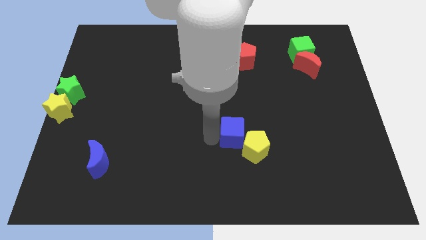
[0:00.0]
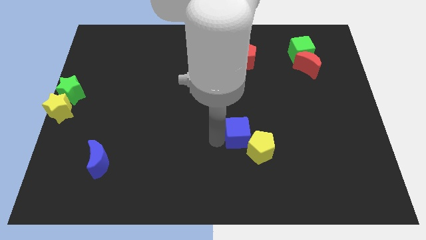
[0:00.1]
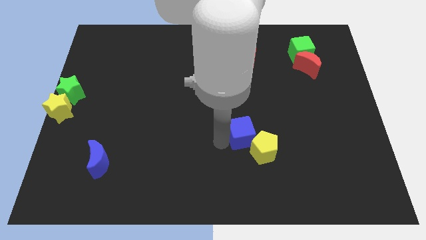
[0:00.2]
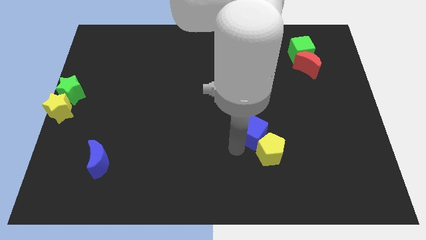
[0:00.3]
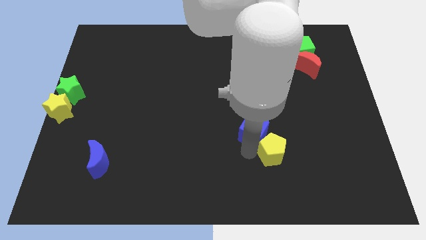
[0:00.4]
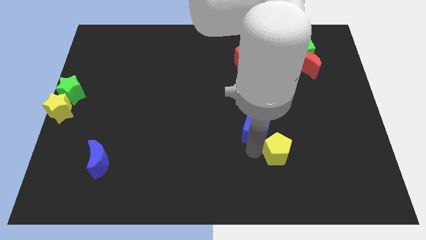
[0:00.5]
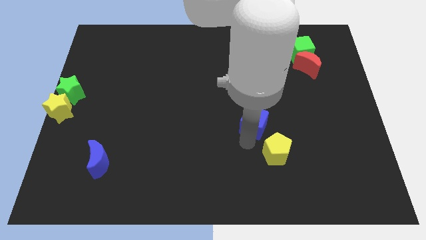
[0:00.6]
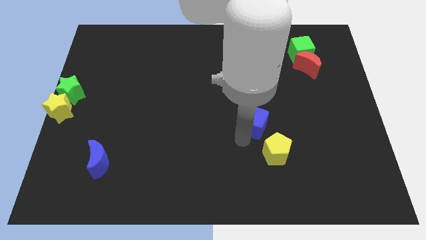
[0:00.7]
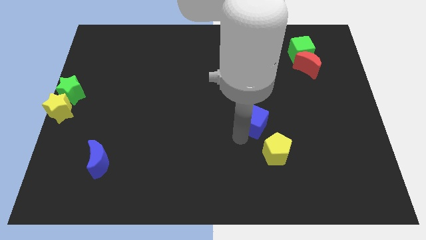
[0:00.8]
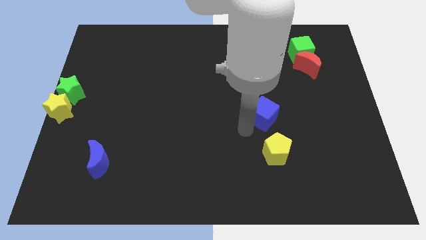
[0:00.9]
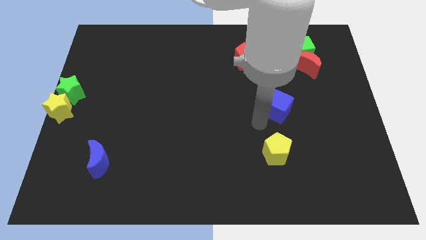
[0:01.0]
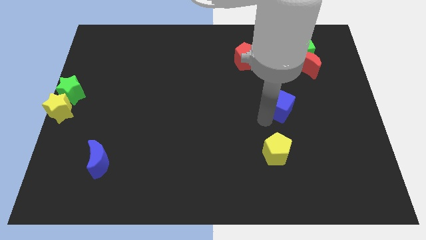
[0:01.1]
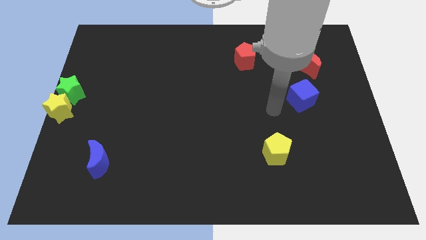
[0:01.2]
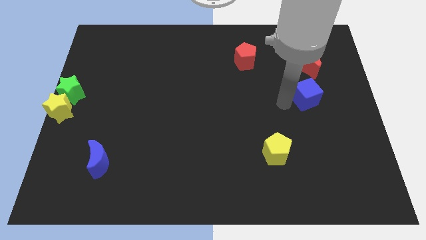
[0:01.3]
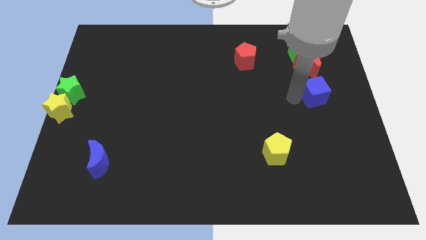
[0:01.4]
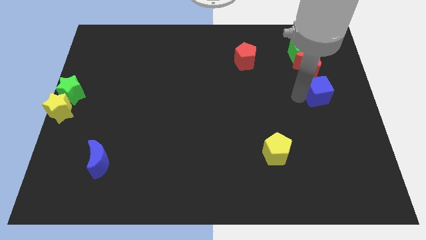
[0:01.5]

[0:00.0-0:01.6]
separate the blue cube from the yellow pentagon

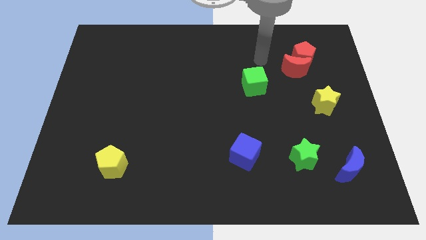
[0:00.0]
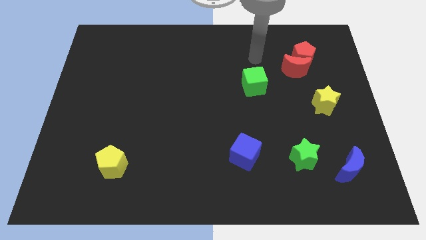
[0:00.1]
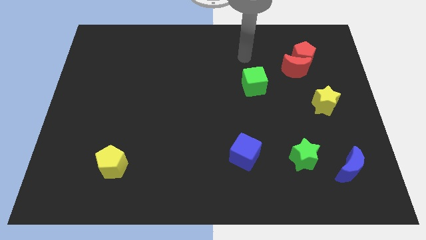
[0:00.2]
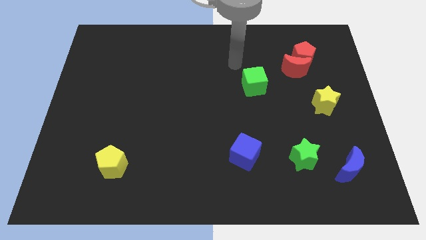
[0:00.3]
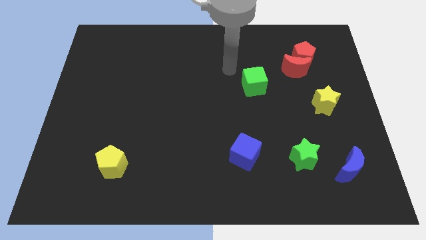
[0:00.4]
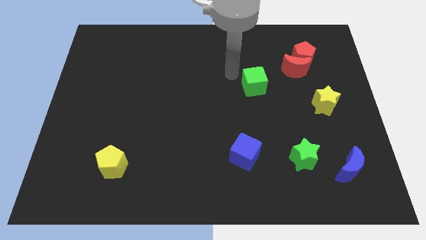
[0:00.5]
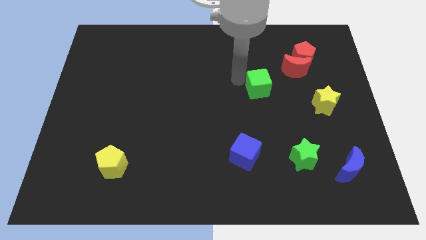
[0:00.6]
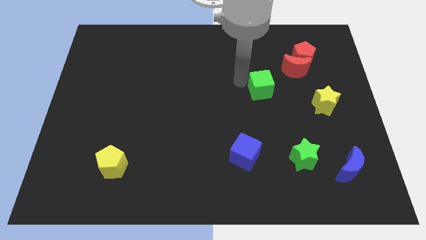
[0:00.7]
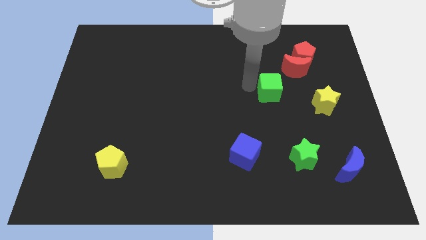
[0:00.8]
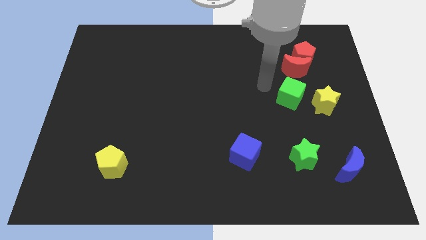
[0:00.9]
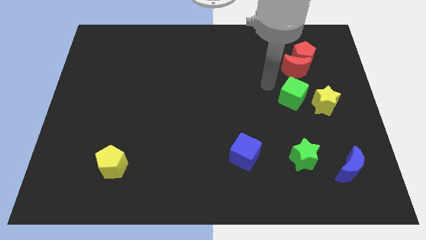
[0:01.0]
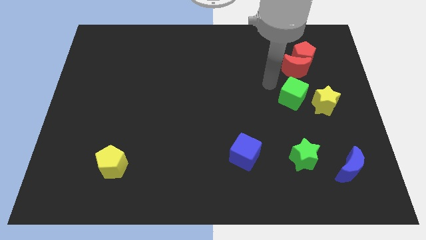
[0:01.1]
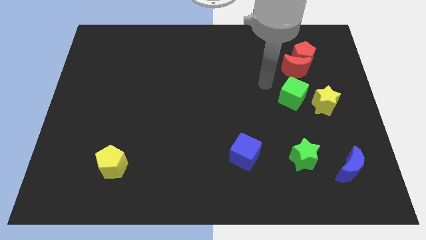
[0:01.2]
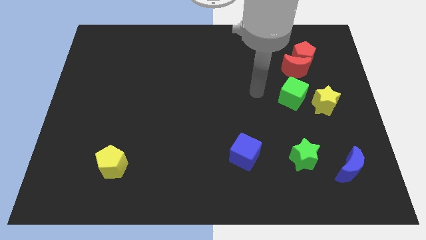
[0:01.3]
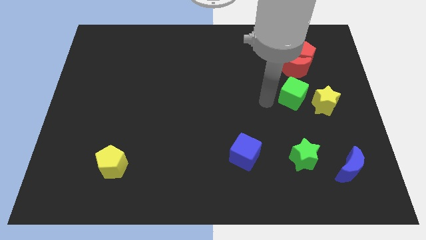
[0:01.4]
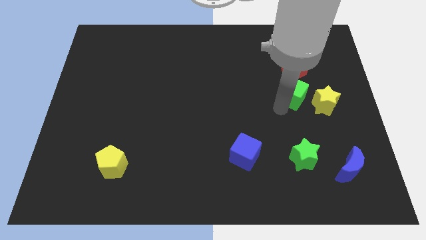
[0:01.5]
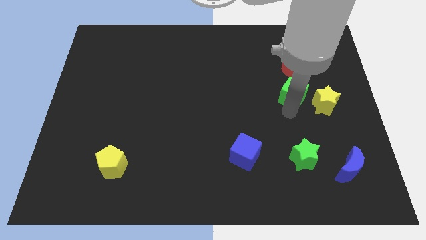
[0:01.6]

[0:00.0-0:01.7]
place the green cube underneath the red moon

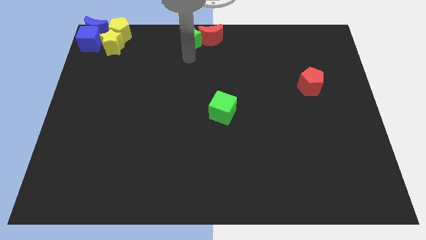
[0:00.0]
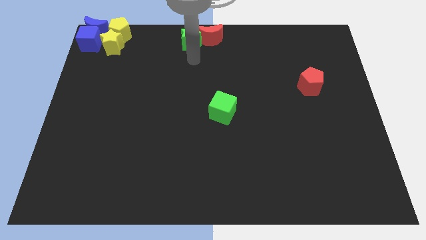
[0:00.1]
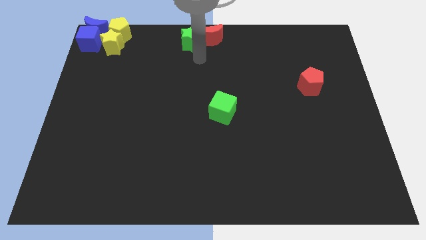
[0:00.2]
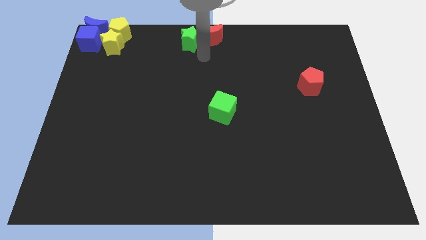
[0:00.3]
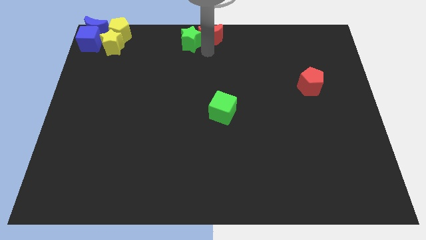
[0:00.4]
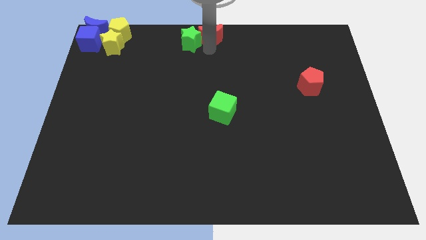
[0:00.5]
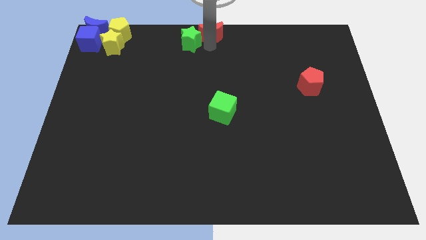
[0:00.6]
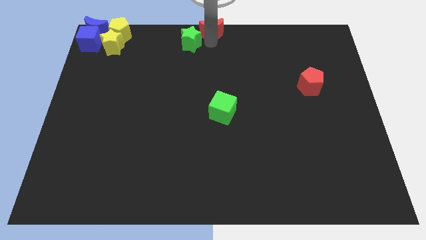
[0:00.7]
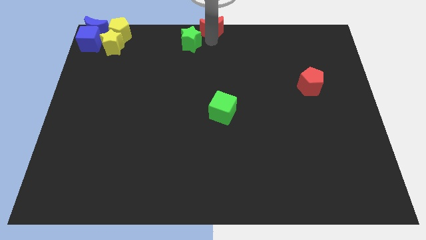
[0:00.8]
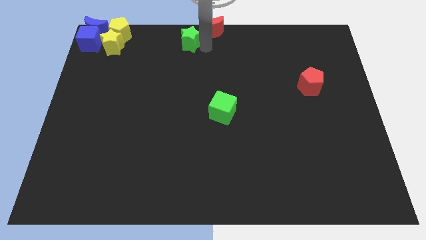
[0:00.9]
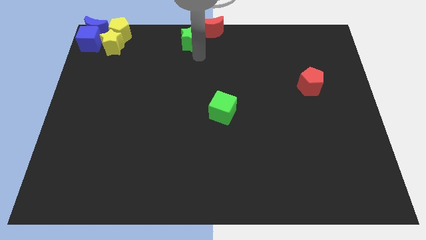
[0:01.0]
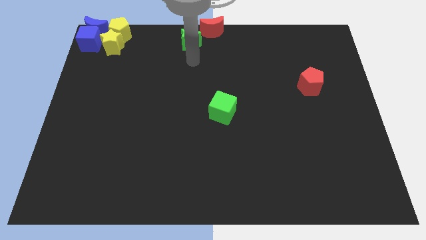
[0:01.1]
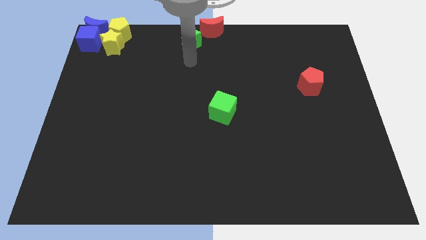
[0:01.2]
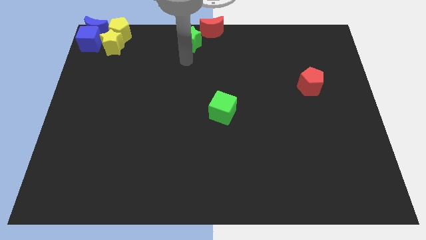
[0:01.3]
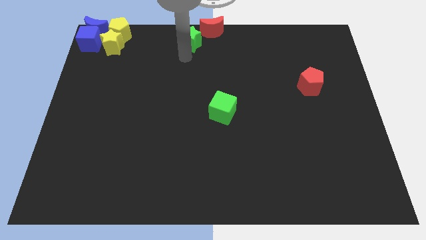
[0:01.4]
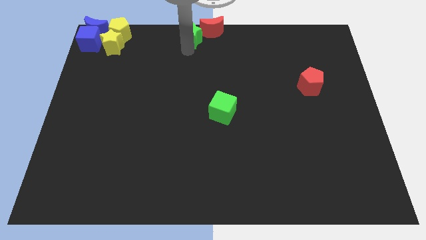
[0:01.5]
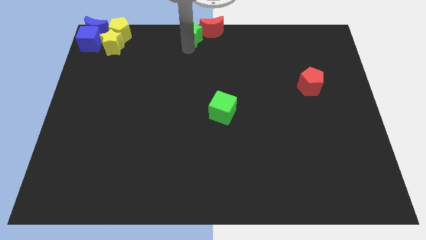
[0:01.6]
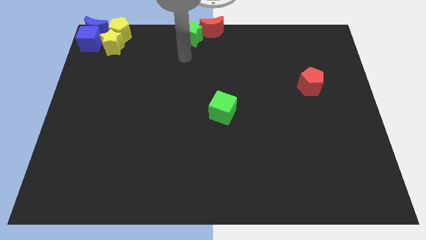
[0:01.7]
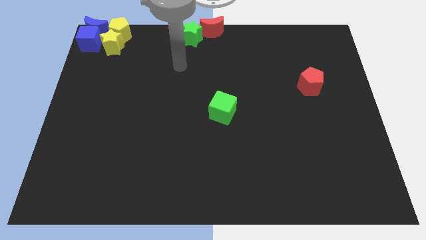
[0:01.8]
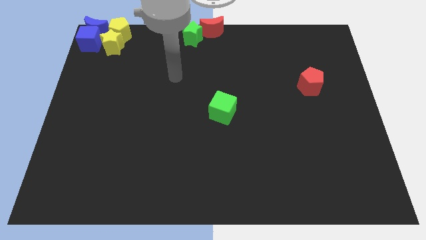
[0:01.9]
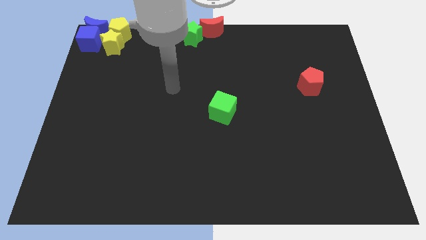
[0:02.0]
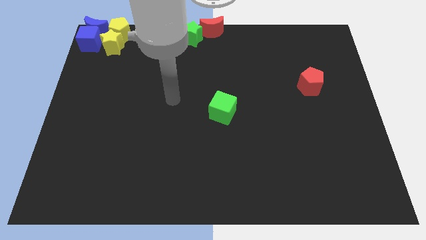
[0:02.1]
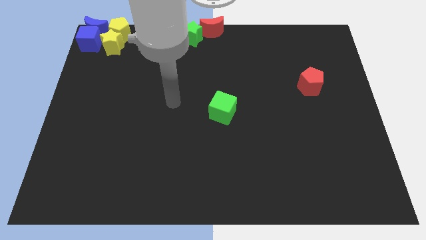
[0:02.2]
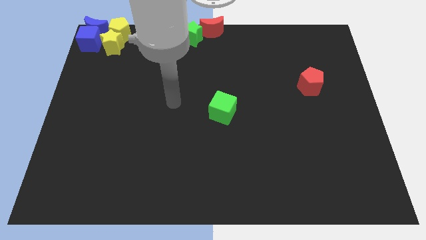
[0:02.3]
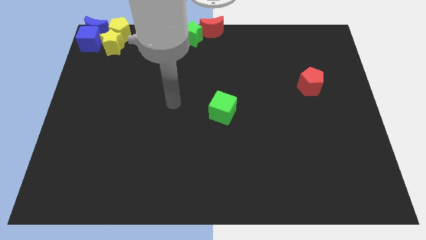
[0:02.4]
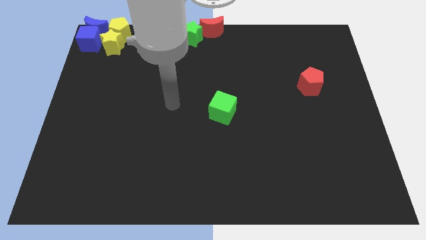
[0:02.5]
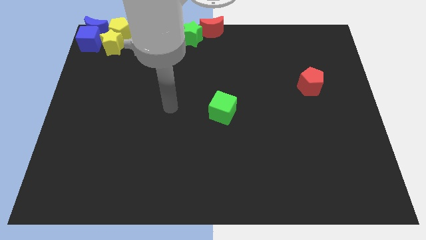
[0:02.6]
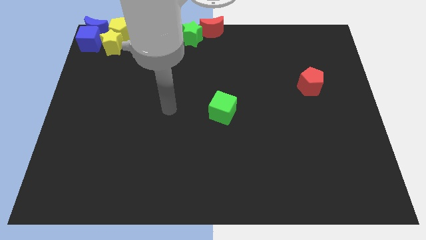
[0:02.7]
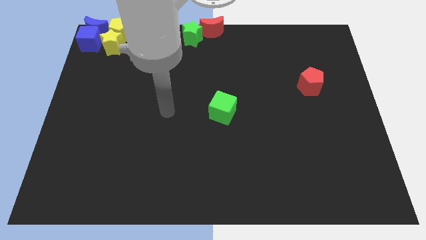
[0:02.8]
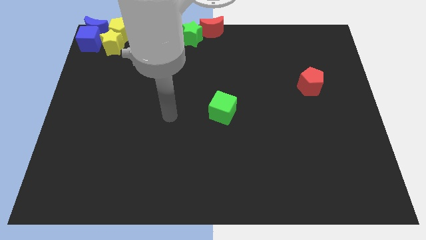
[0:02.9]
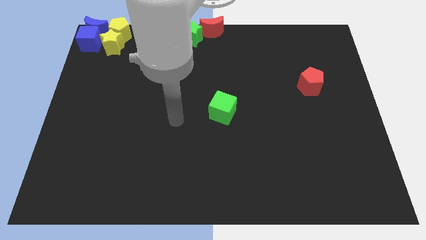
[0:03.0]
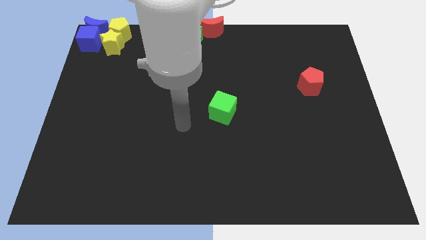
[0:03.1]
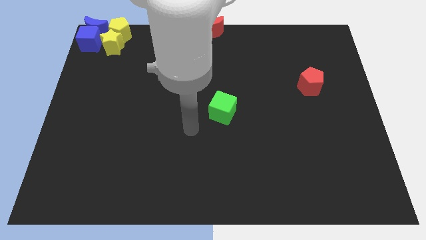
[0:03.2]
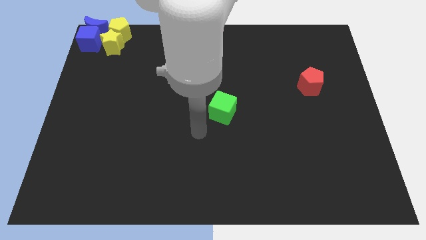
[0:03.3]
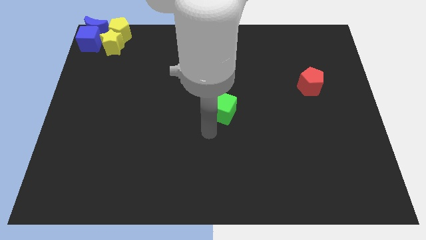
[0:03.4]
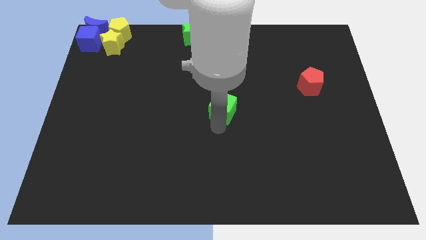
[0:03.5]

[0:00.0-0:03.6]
move your arm to the bottom of the green cube

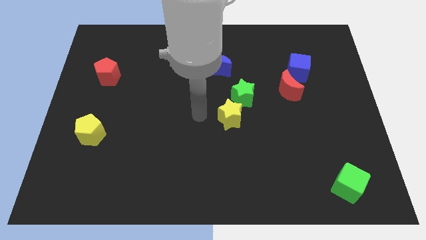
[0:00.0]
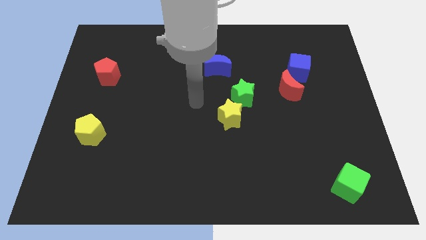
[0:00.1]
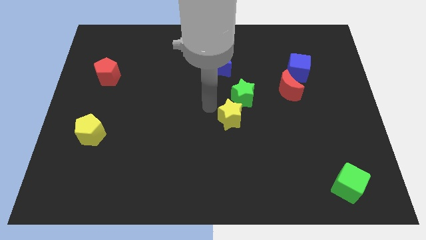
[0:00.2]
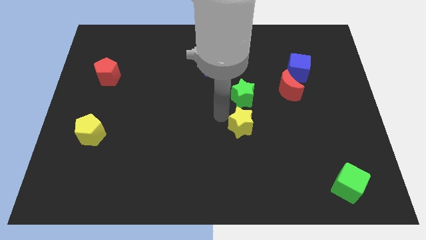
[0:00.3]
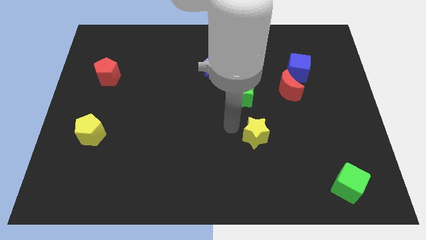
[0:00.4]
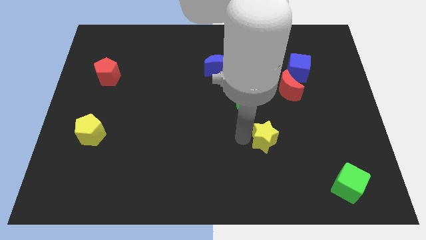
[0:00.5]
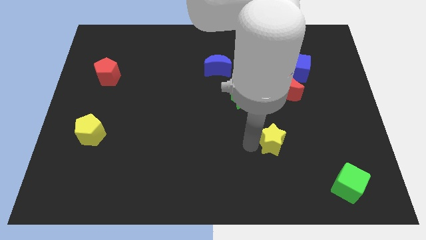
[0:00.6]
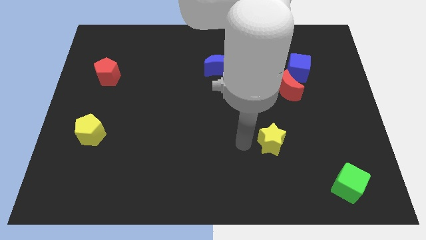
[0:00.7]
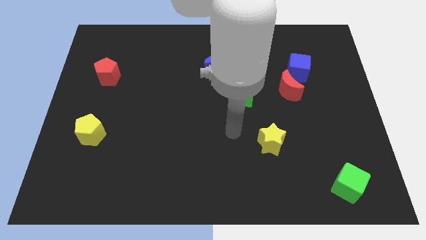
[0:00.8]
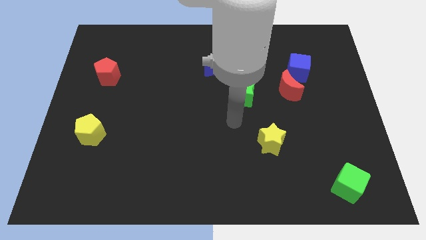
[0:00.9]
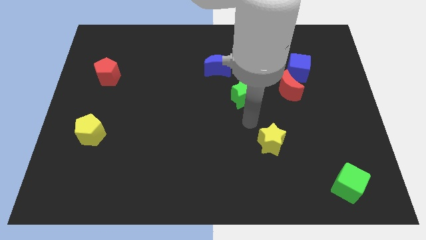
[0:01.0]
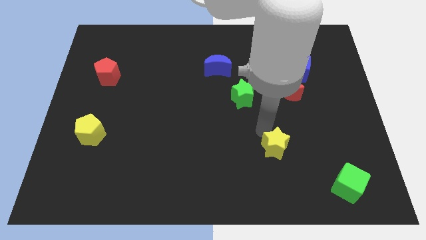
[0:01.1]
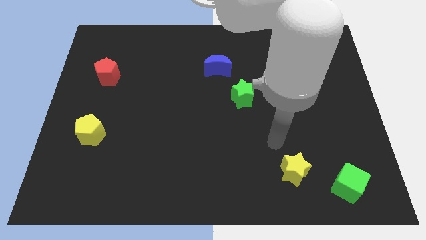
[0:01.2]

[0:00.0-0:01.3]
move the yellow star towards the top left side of the green cube

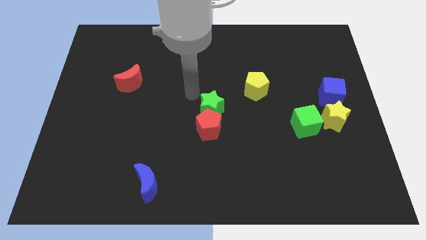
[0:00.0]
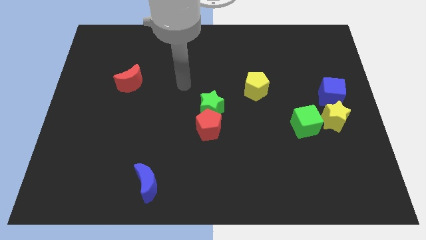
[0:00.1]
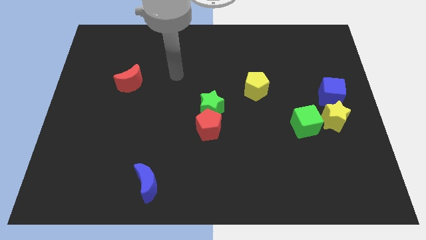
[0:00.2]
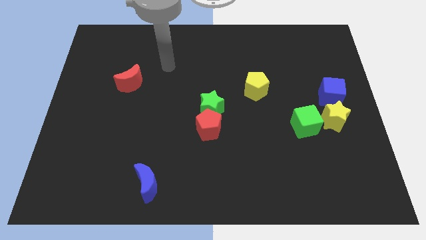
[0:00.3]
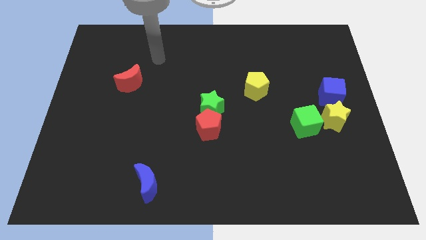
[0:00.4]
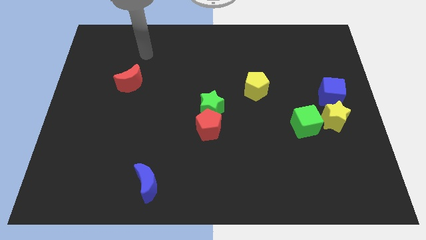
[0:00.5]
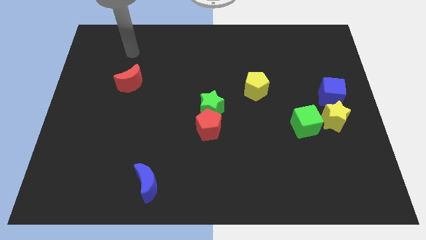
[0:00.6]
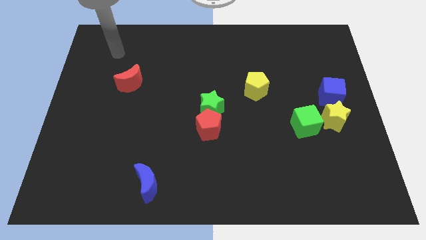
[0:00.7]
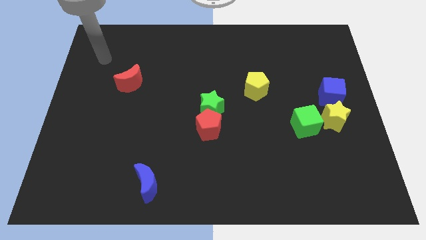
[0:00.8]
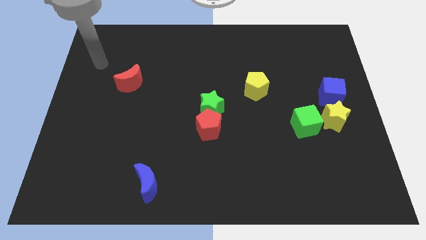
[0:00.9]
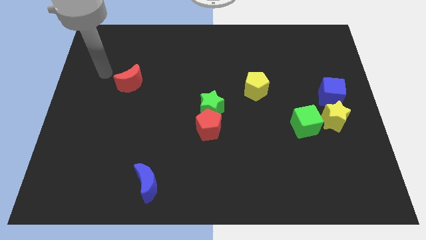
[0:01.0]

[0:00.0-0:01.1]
move your arm away form the green star
